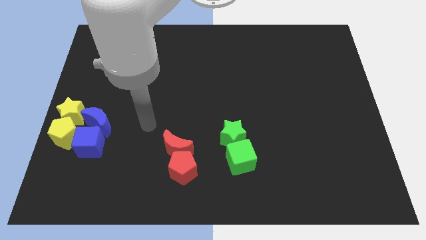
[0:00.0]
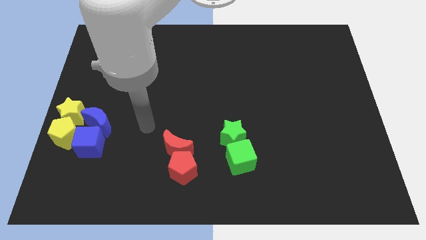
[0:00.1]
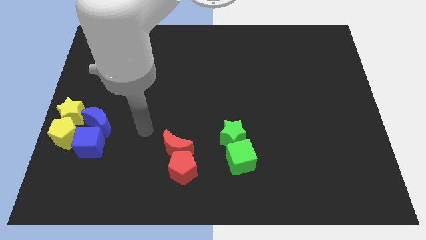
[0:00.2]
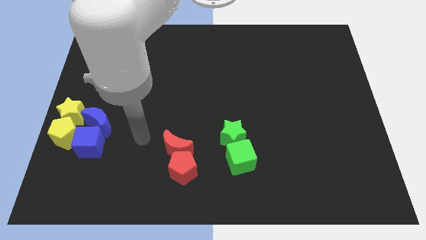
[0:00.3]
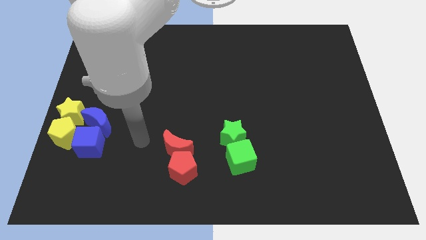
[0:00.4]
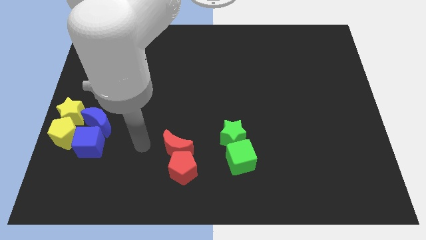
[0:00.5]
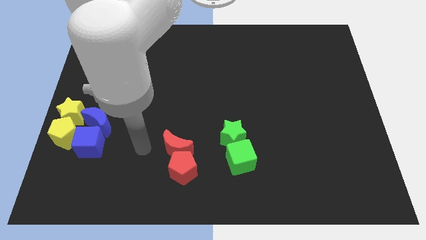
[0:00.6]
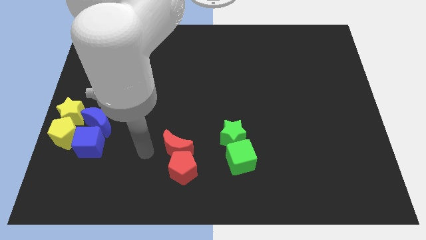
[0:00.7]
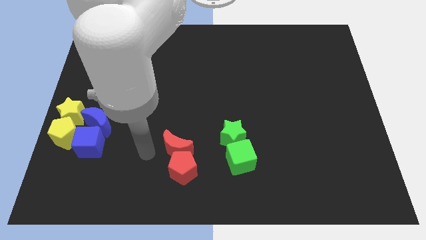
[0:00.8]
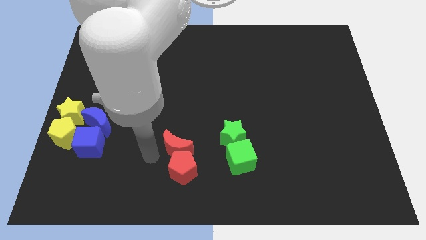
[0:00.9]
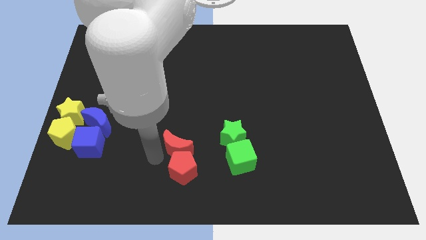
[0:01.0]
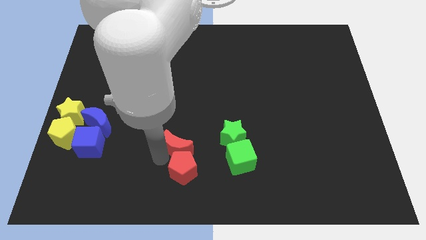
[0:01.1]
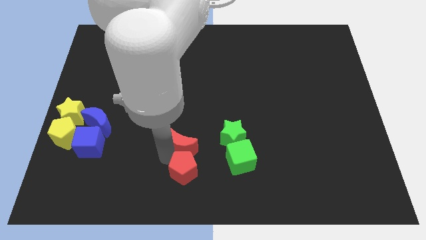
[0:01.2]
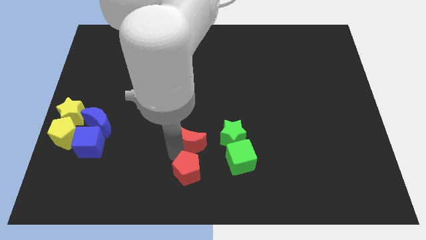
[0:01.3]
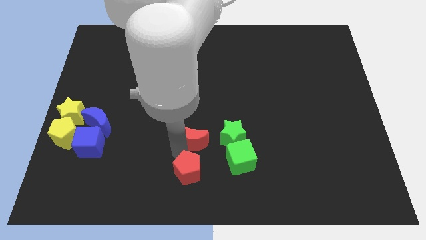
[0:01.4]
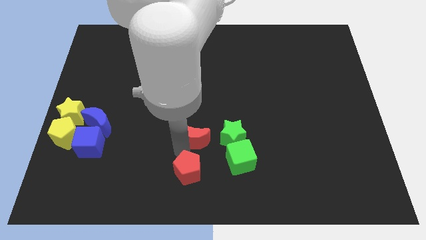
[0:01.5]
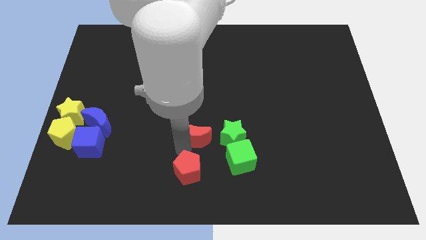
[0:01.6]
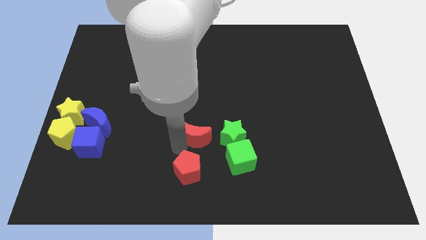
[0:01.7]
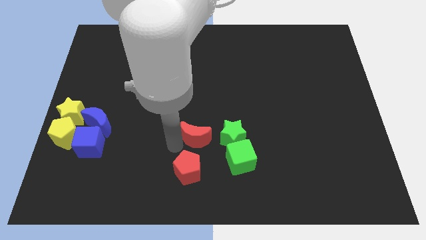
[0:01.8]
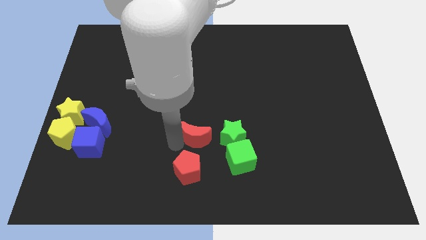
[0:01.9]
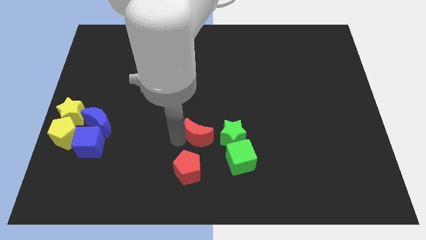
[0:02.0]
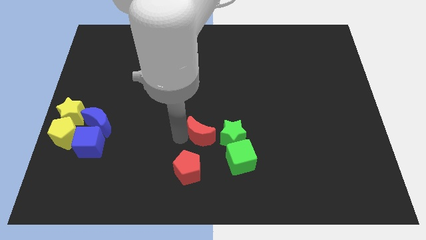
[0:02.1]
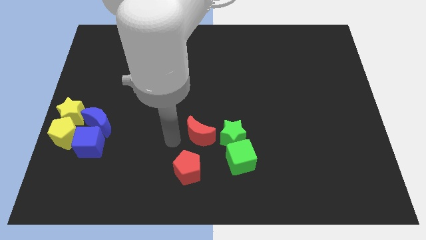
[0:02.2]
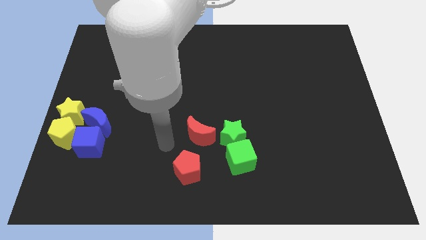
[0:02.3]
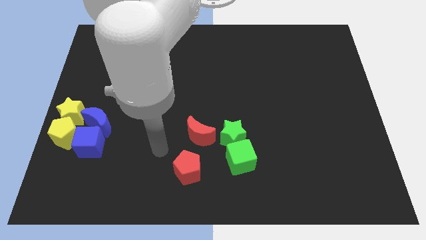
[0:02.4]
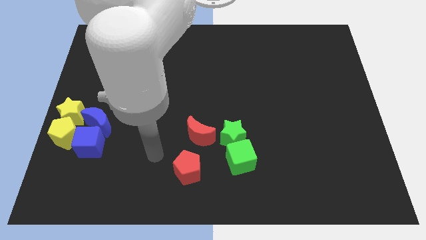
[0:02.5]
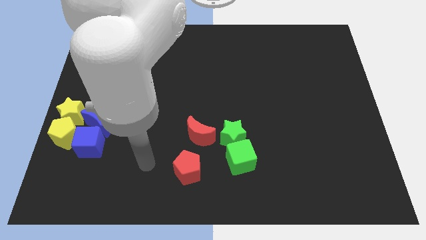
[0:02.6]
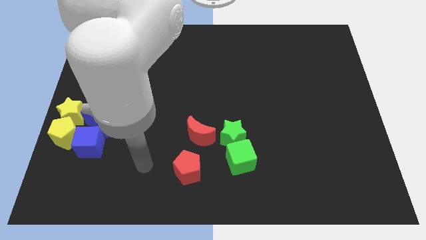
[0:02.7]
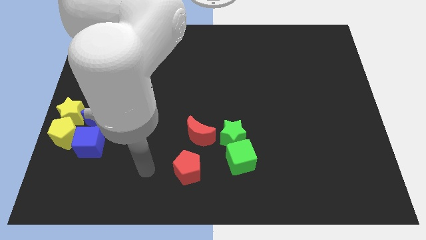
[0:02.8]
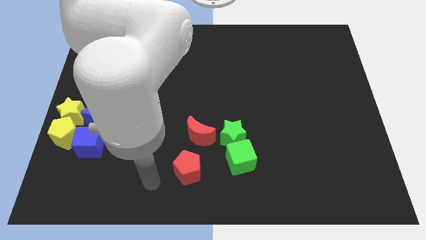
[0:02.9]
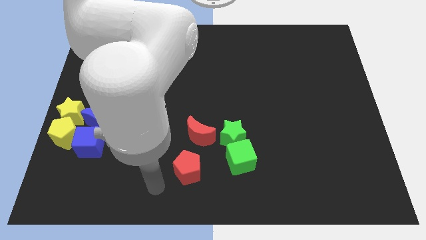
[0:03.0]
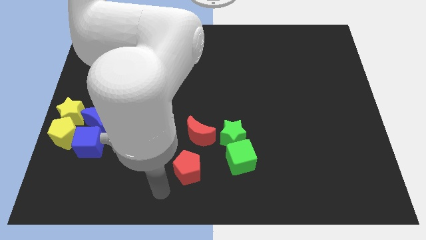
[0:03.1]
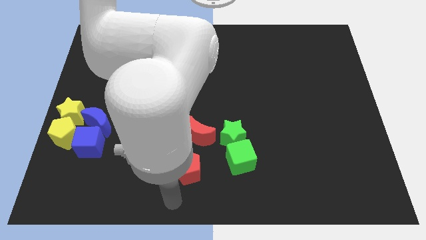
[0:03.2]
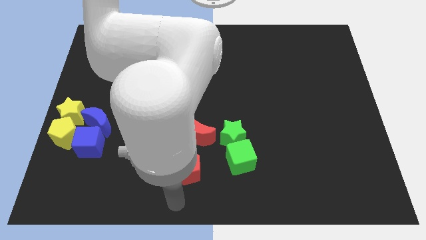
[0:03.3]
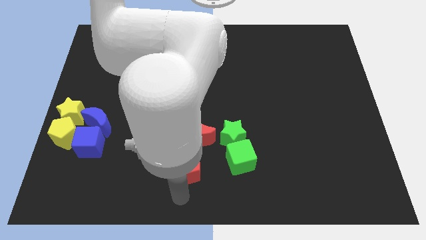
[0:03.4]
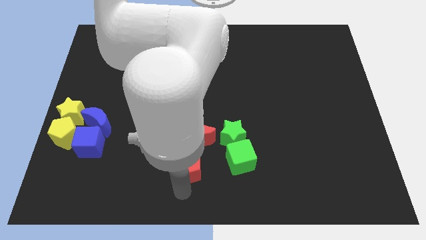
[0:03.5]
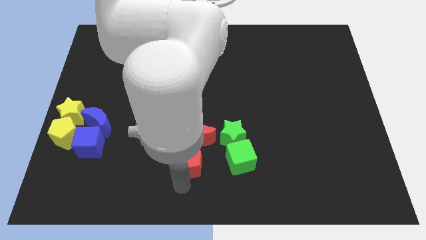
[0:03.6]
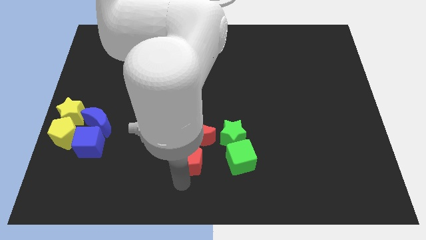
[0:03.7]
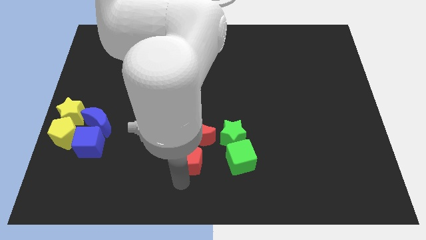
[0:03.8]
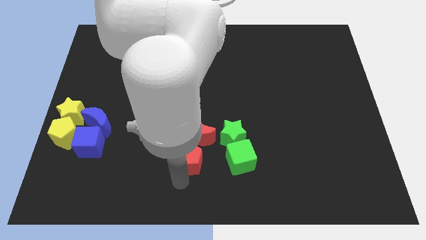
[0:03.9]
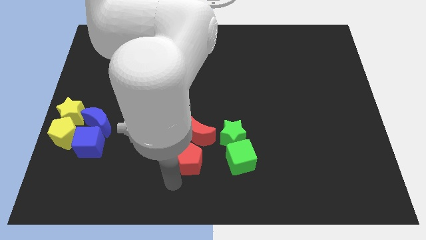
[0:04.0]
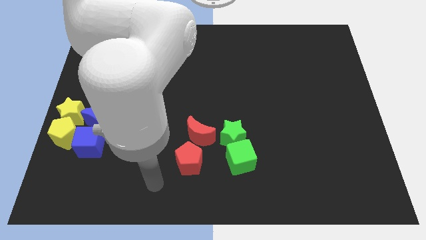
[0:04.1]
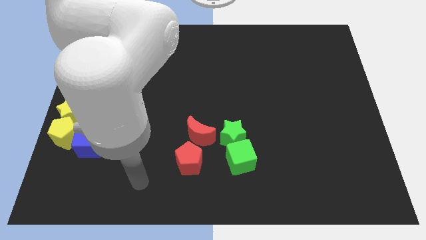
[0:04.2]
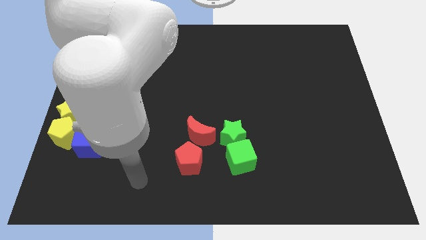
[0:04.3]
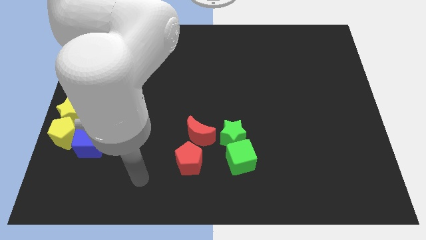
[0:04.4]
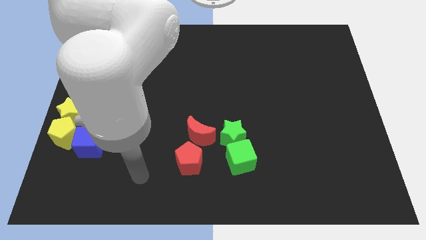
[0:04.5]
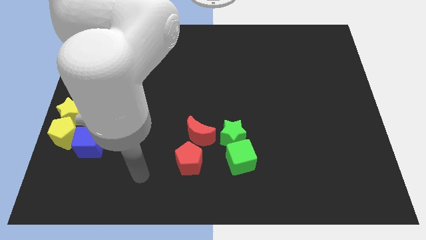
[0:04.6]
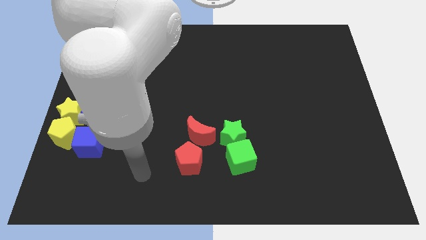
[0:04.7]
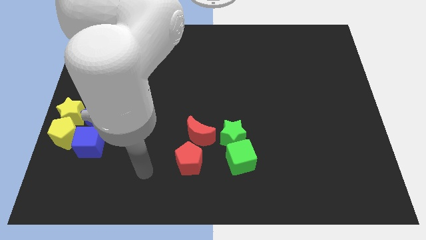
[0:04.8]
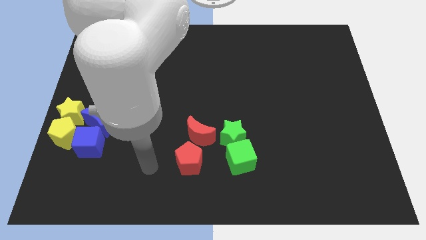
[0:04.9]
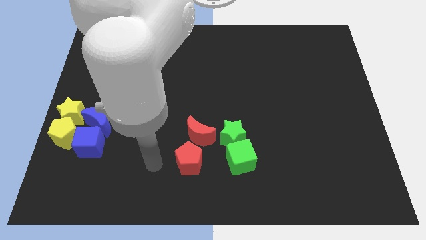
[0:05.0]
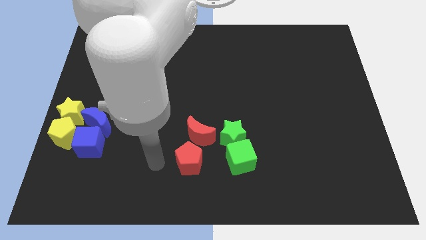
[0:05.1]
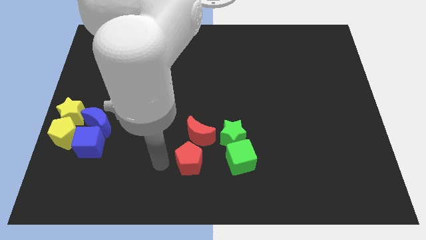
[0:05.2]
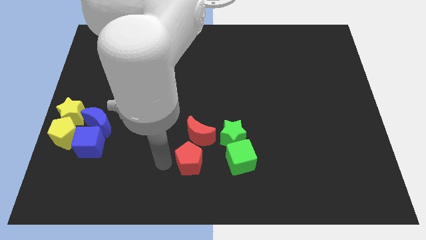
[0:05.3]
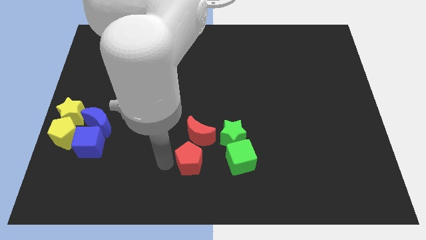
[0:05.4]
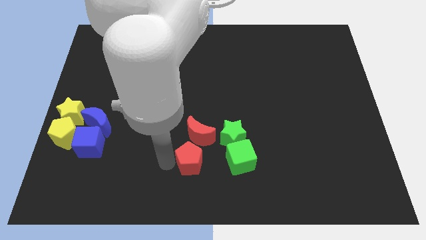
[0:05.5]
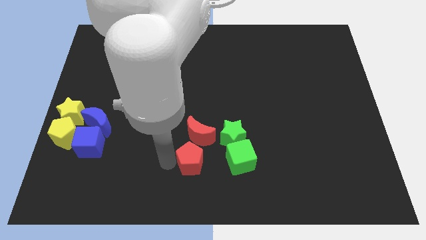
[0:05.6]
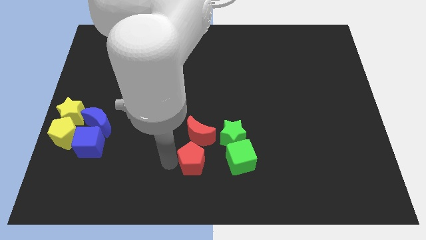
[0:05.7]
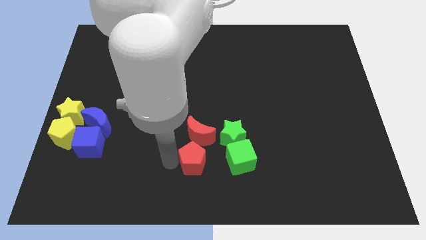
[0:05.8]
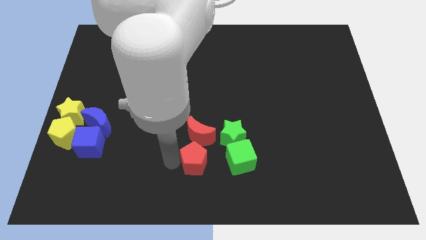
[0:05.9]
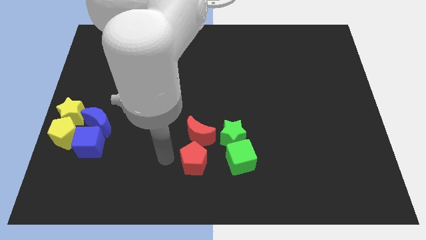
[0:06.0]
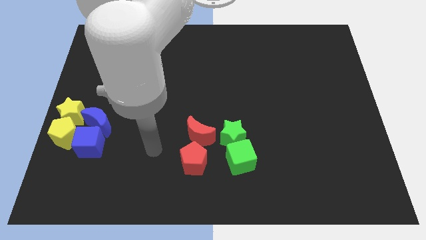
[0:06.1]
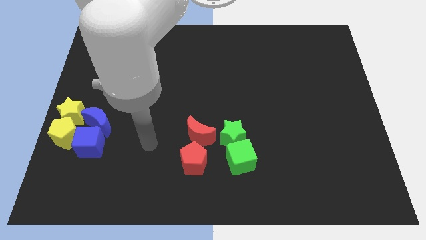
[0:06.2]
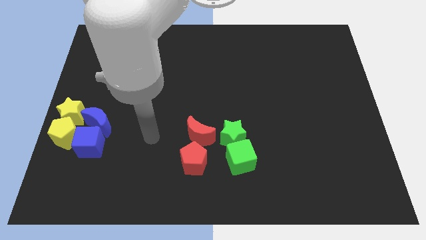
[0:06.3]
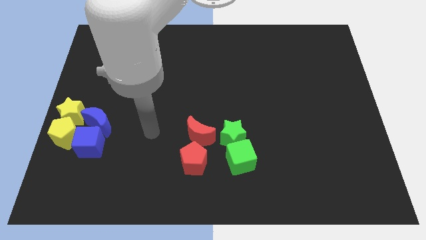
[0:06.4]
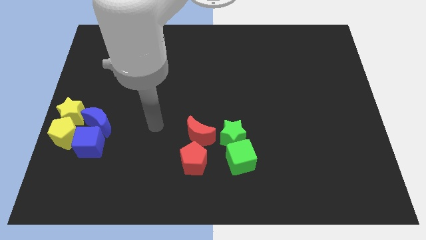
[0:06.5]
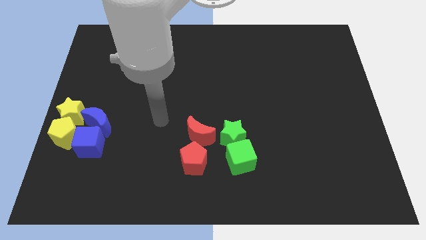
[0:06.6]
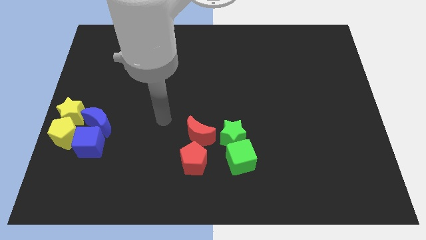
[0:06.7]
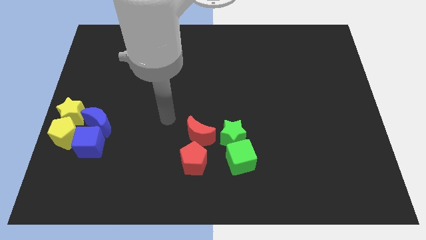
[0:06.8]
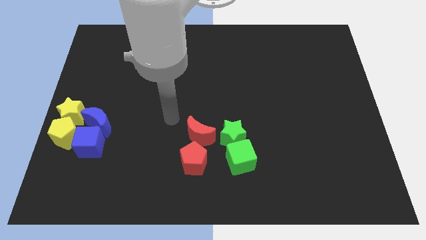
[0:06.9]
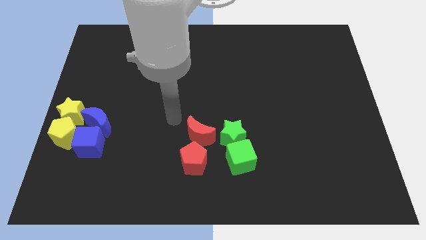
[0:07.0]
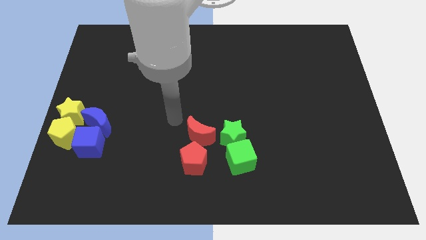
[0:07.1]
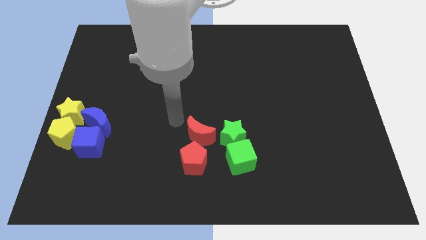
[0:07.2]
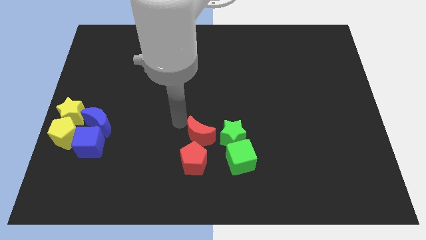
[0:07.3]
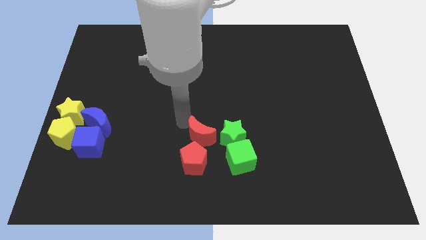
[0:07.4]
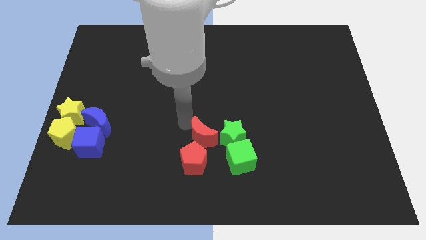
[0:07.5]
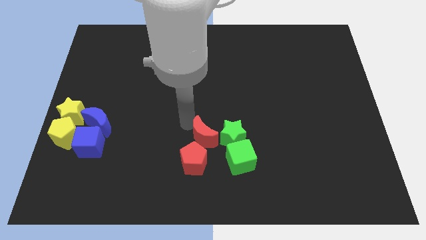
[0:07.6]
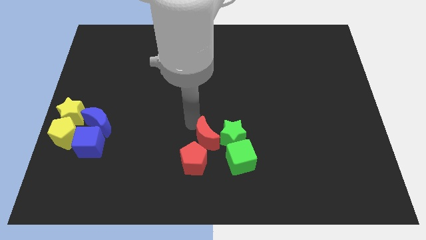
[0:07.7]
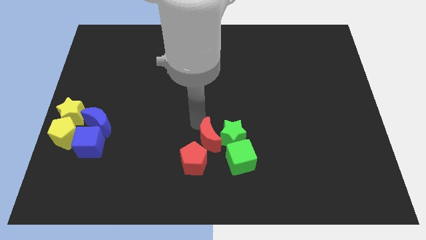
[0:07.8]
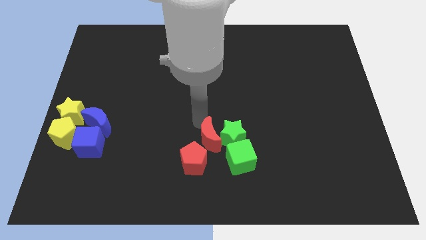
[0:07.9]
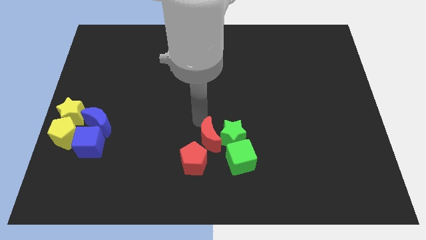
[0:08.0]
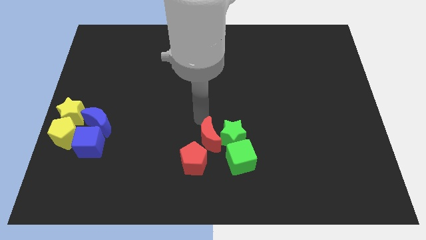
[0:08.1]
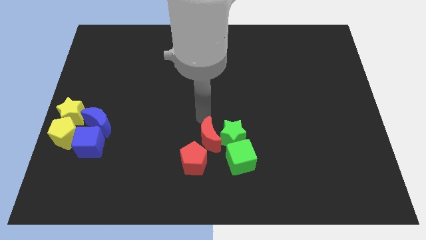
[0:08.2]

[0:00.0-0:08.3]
push the red blocks into the green blocks

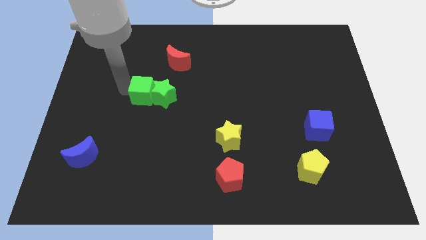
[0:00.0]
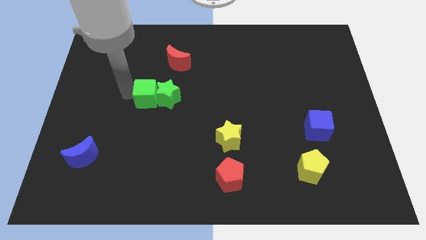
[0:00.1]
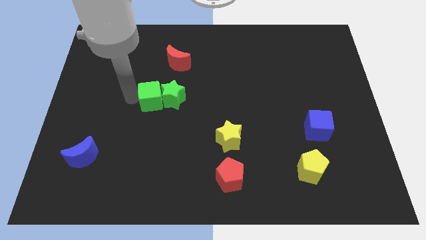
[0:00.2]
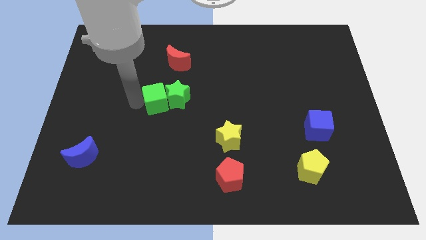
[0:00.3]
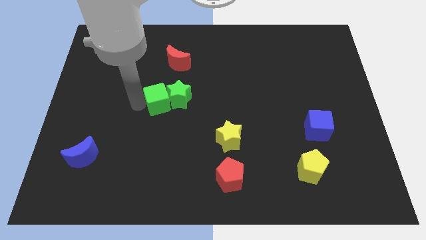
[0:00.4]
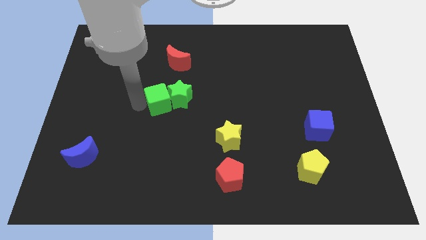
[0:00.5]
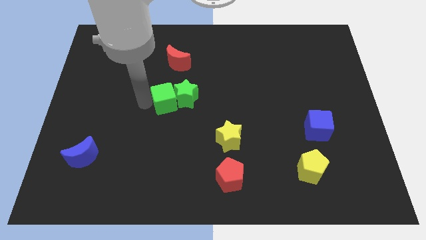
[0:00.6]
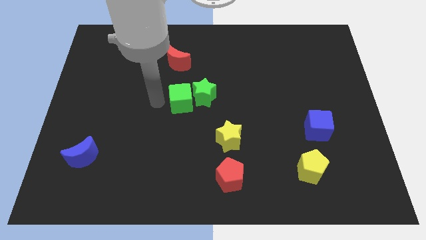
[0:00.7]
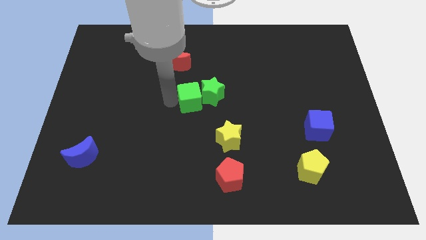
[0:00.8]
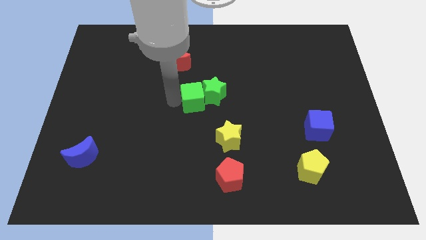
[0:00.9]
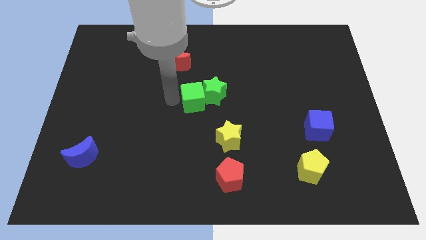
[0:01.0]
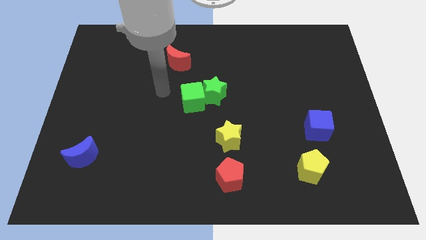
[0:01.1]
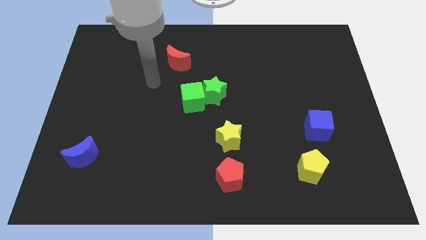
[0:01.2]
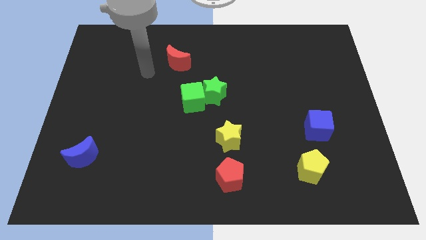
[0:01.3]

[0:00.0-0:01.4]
place green cube and green star at the middle of the board
